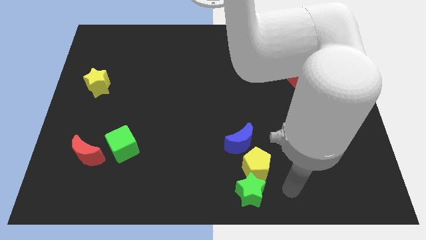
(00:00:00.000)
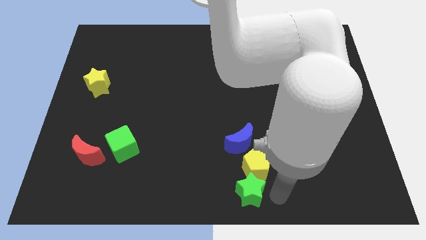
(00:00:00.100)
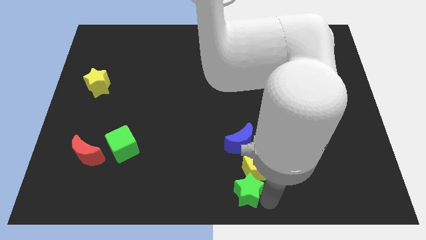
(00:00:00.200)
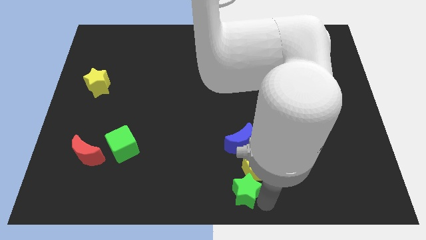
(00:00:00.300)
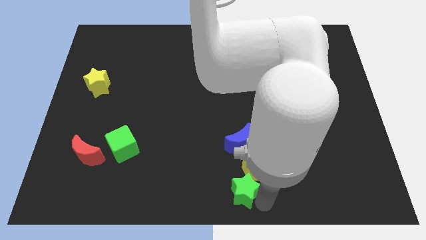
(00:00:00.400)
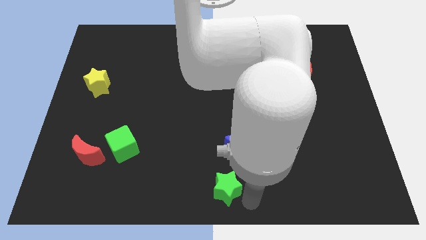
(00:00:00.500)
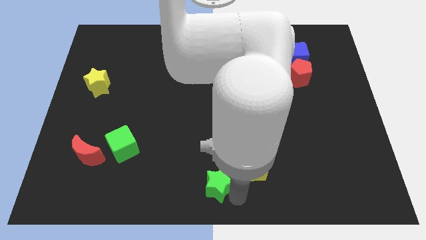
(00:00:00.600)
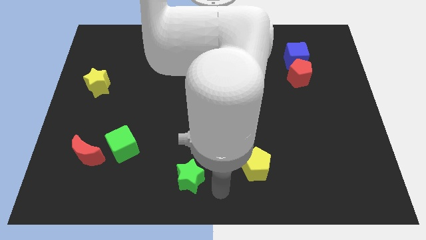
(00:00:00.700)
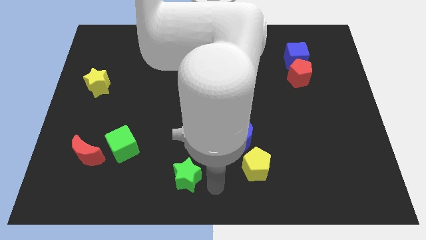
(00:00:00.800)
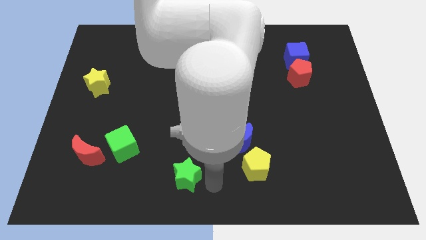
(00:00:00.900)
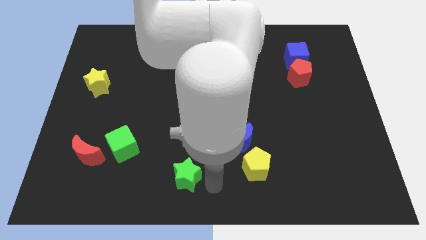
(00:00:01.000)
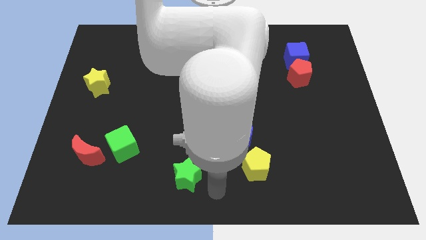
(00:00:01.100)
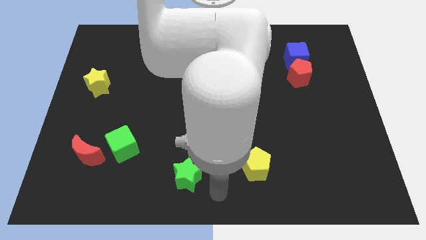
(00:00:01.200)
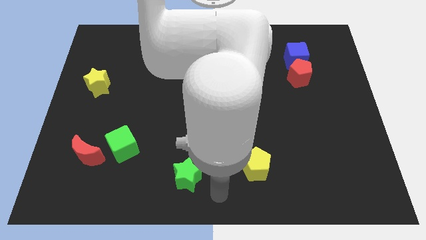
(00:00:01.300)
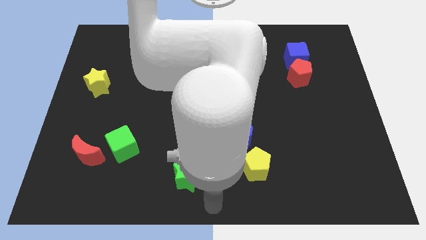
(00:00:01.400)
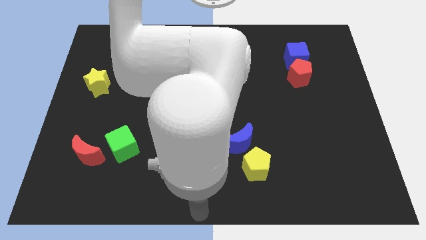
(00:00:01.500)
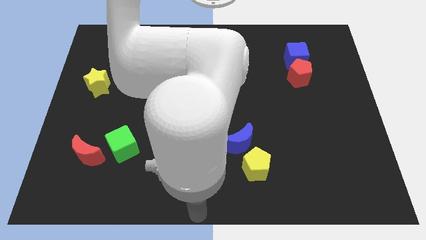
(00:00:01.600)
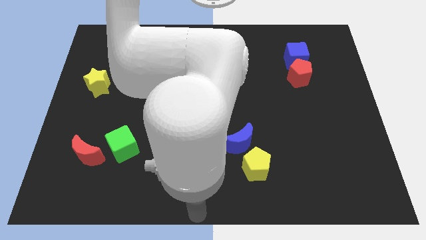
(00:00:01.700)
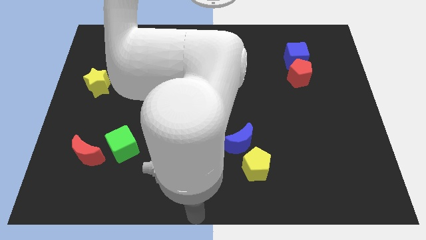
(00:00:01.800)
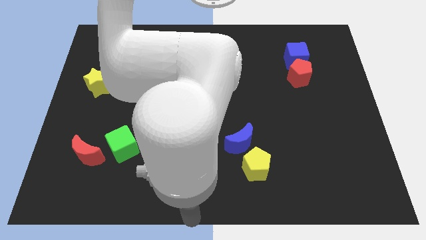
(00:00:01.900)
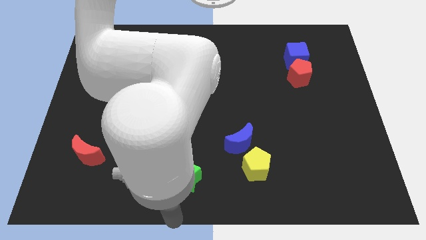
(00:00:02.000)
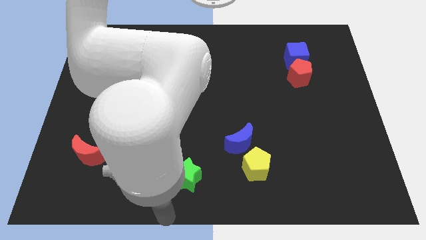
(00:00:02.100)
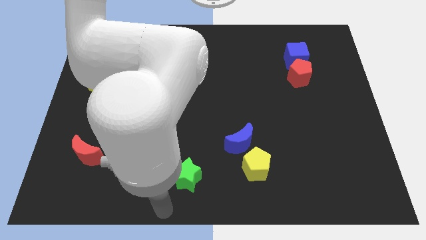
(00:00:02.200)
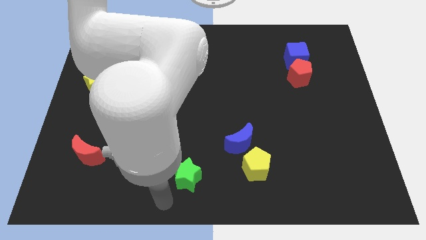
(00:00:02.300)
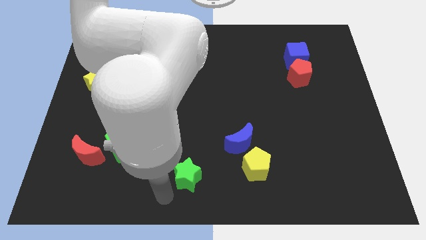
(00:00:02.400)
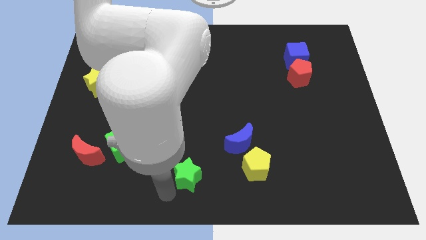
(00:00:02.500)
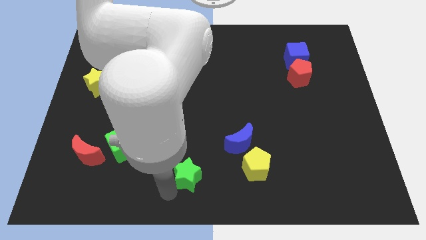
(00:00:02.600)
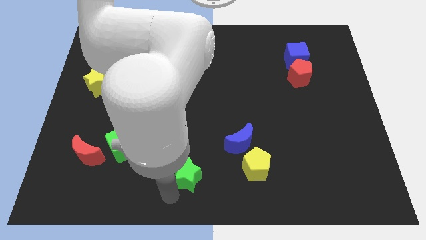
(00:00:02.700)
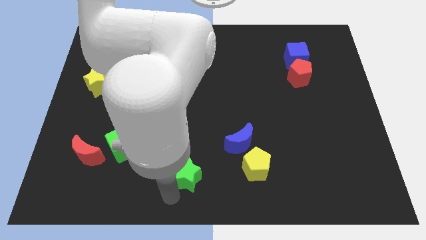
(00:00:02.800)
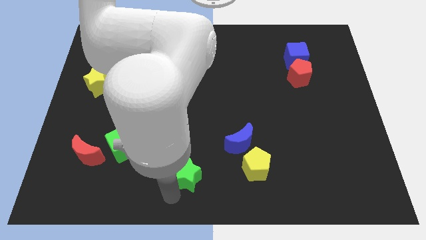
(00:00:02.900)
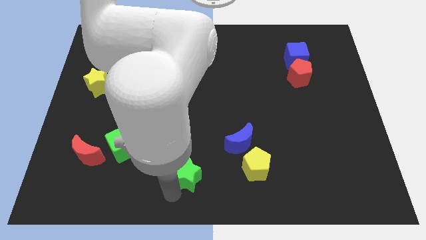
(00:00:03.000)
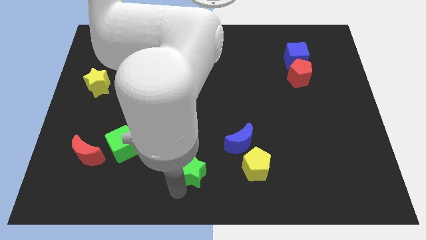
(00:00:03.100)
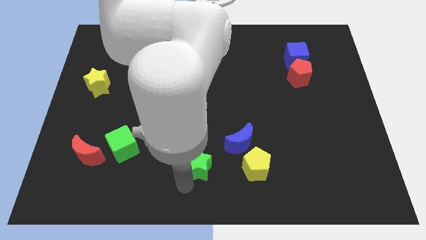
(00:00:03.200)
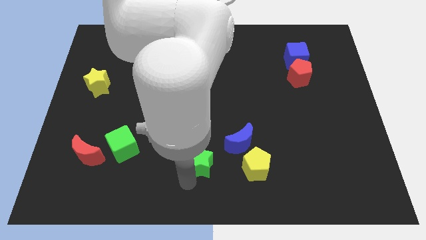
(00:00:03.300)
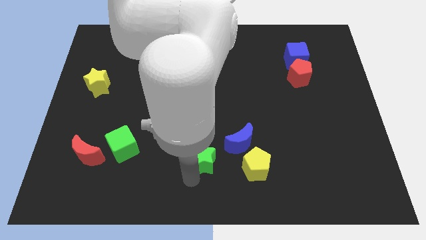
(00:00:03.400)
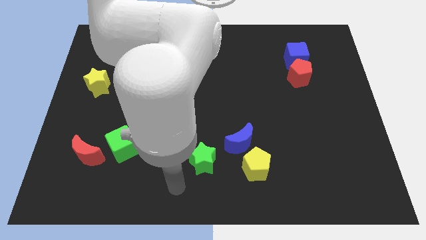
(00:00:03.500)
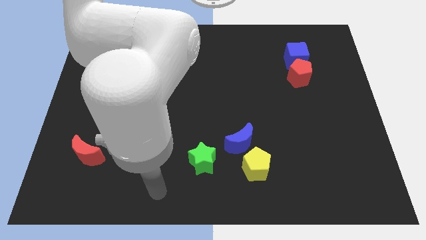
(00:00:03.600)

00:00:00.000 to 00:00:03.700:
place the green star to the left of the yellow pentagon

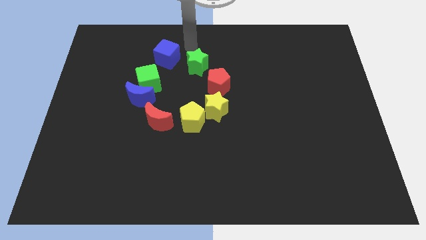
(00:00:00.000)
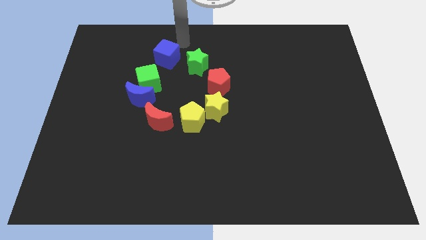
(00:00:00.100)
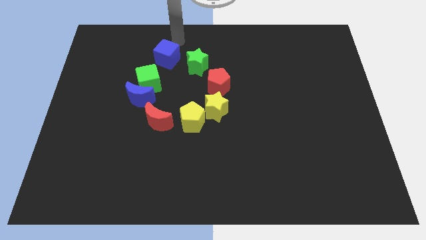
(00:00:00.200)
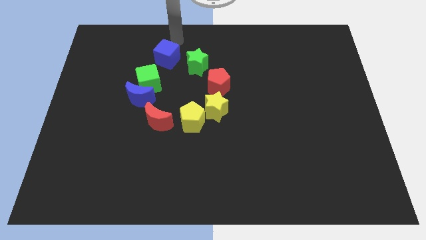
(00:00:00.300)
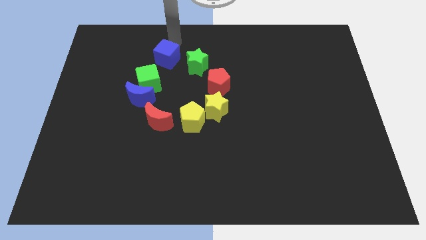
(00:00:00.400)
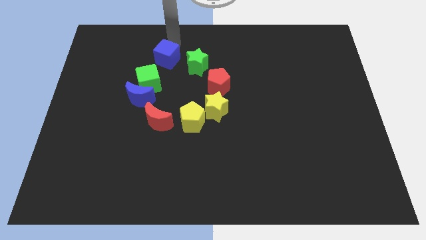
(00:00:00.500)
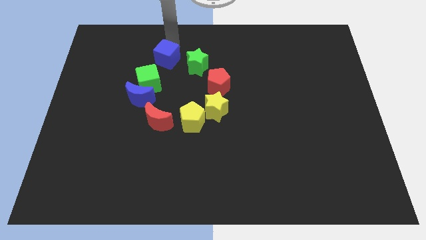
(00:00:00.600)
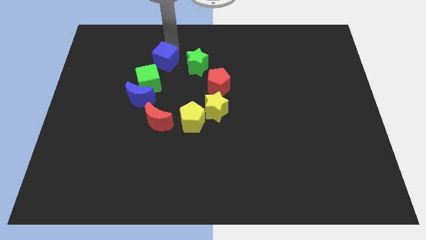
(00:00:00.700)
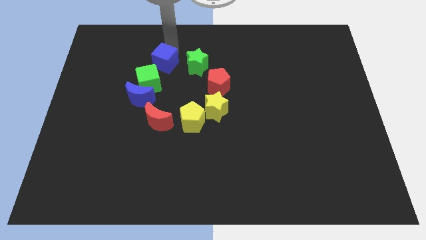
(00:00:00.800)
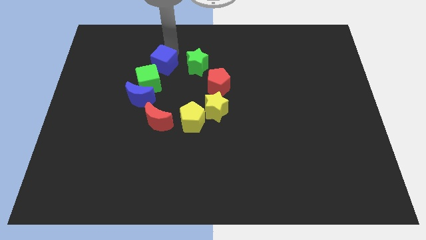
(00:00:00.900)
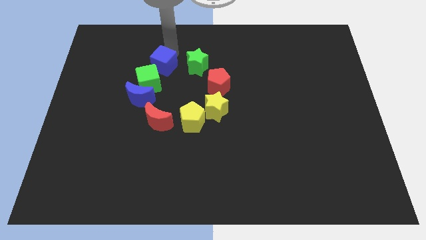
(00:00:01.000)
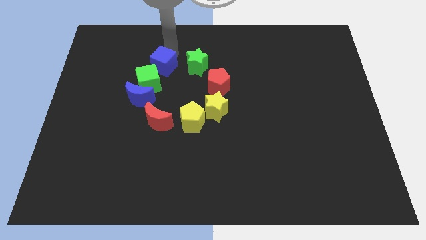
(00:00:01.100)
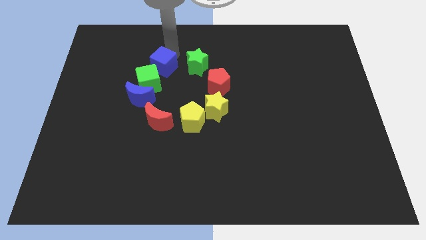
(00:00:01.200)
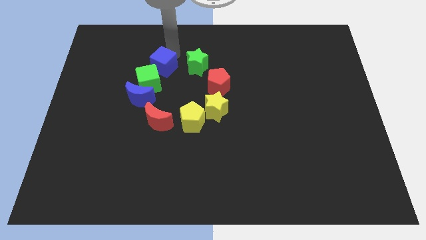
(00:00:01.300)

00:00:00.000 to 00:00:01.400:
touch the blue cube

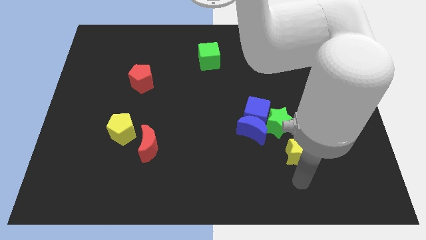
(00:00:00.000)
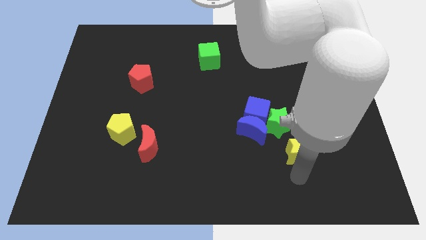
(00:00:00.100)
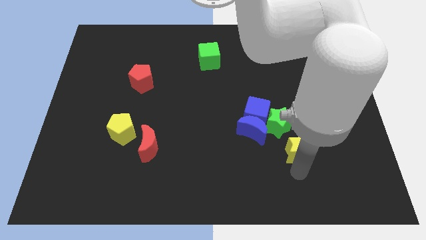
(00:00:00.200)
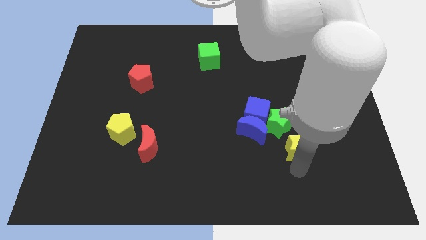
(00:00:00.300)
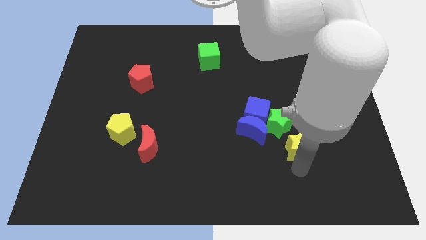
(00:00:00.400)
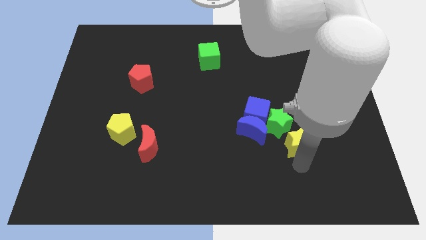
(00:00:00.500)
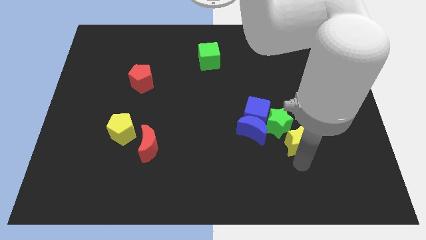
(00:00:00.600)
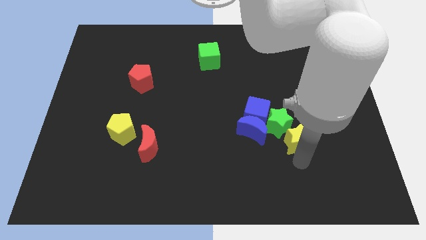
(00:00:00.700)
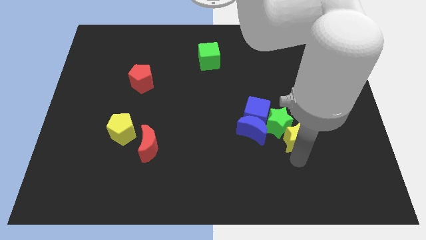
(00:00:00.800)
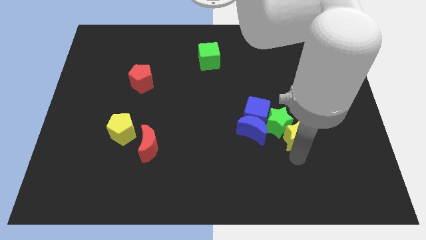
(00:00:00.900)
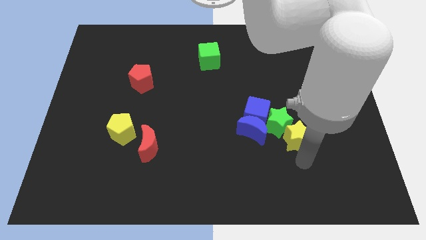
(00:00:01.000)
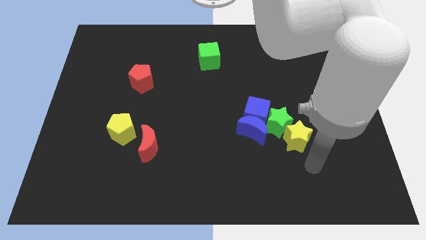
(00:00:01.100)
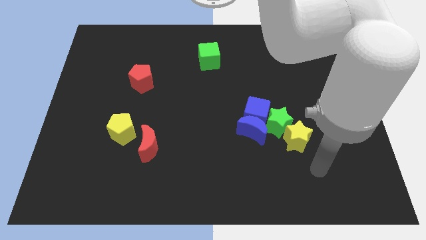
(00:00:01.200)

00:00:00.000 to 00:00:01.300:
push the yellow star to the right of the green star

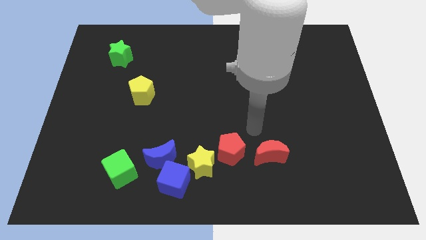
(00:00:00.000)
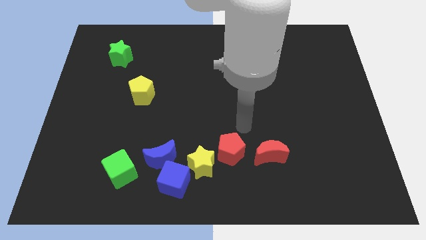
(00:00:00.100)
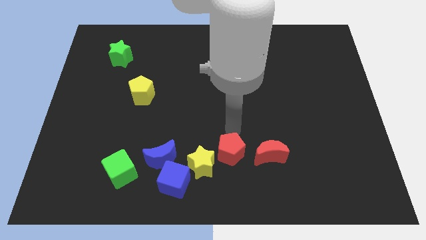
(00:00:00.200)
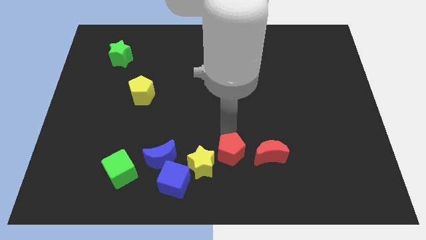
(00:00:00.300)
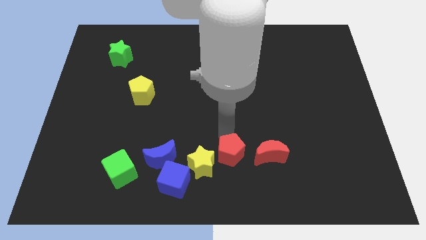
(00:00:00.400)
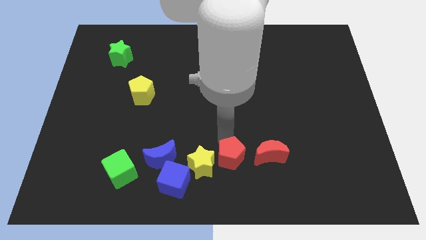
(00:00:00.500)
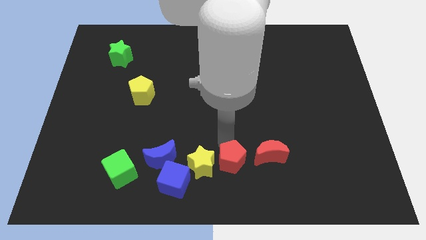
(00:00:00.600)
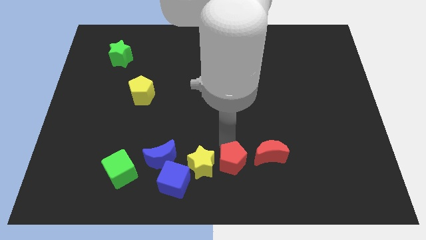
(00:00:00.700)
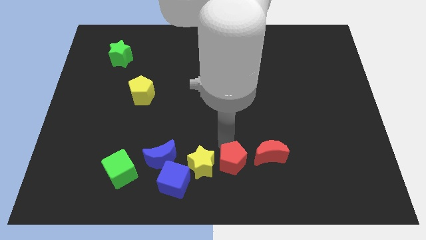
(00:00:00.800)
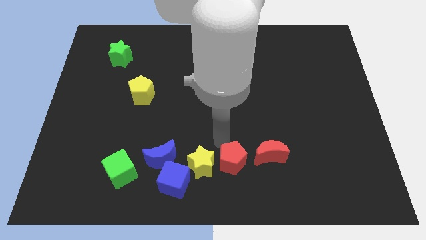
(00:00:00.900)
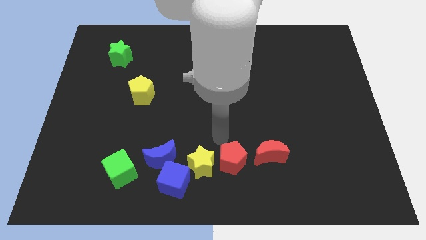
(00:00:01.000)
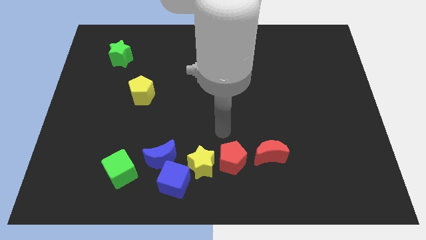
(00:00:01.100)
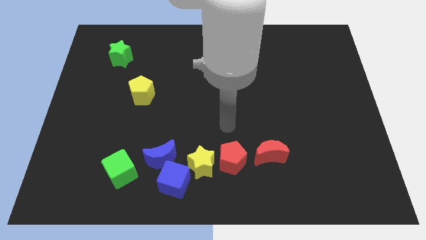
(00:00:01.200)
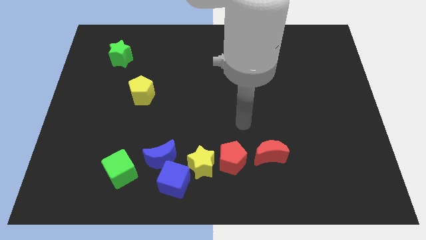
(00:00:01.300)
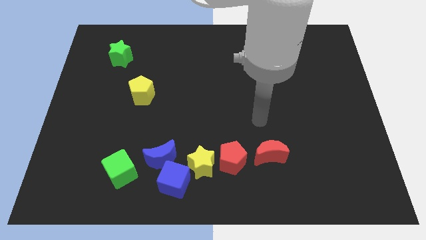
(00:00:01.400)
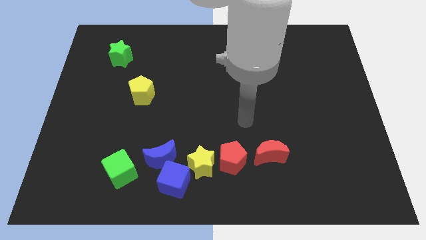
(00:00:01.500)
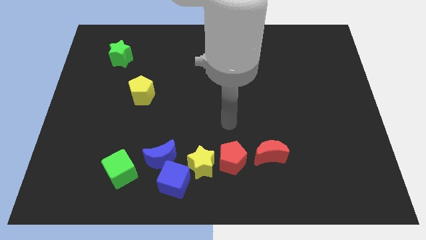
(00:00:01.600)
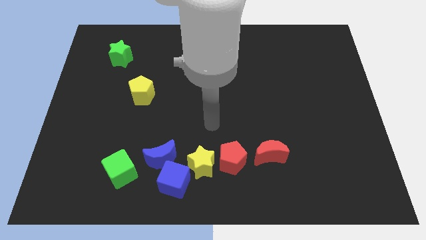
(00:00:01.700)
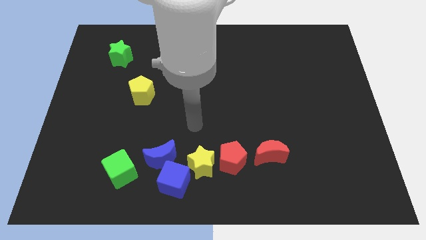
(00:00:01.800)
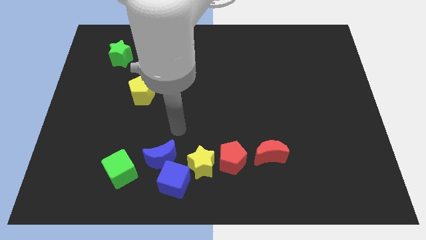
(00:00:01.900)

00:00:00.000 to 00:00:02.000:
push the red pentagon between red moon and yellow star

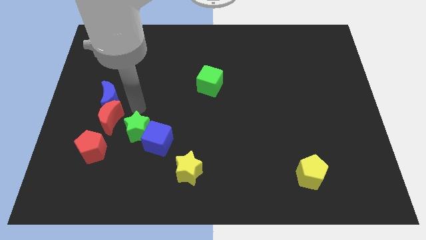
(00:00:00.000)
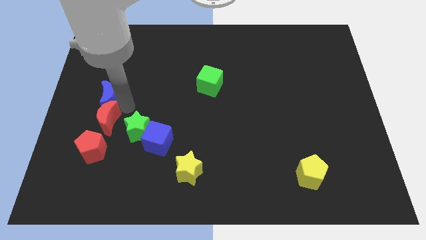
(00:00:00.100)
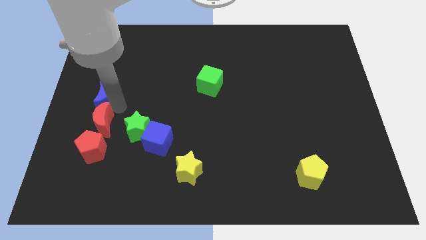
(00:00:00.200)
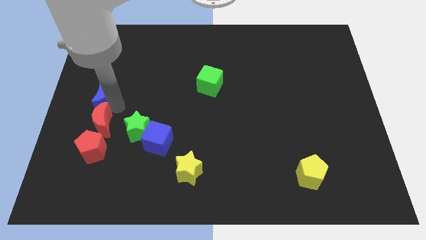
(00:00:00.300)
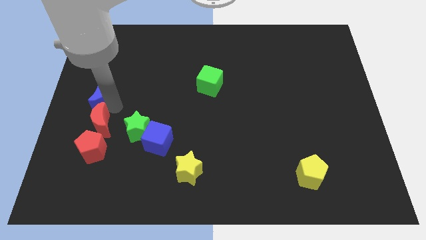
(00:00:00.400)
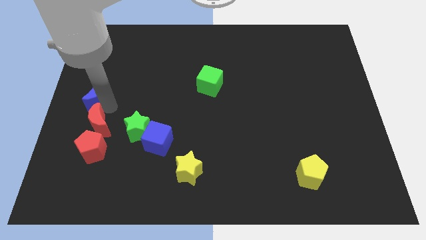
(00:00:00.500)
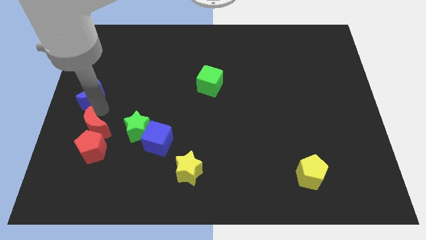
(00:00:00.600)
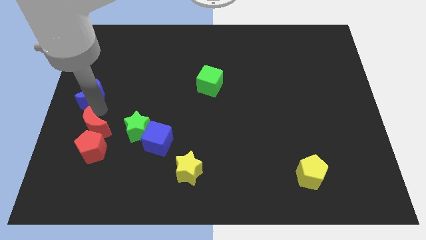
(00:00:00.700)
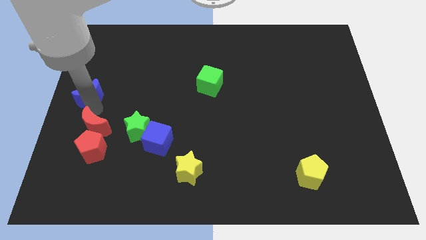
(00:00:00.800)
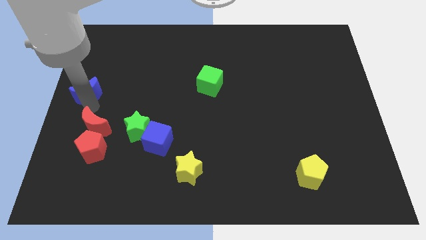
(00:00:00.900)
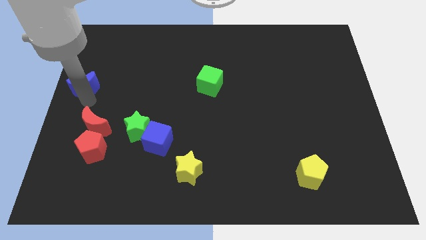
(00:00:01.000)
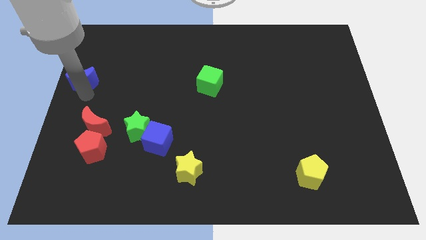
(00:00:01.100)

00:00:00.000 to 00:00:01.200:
seperate red and blue crescents
